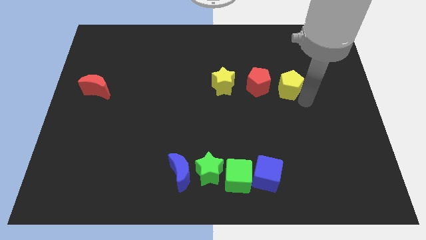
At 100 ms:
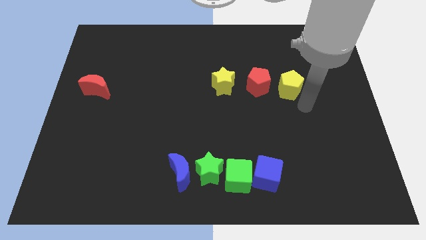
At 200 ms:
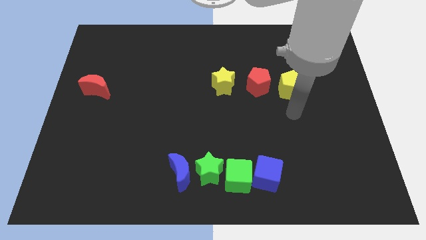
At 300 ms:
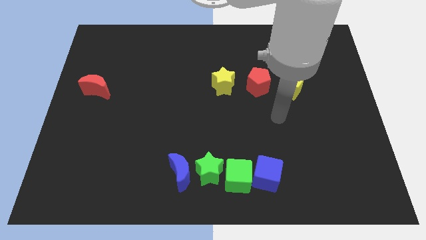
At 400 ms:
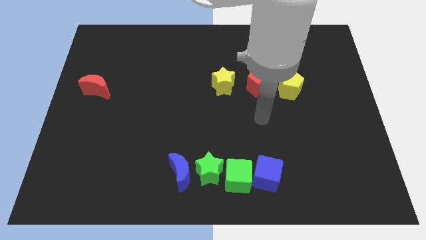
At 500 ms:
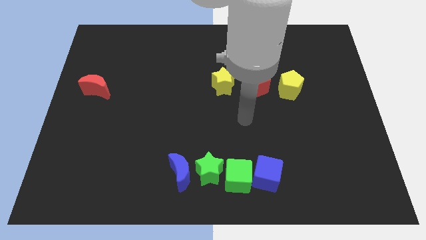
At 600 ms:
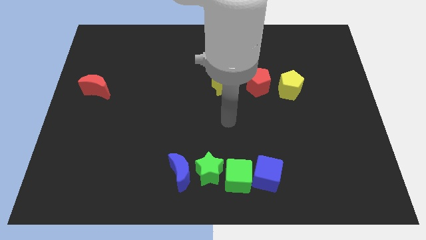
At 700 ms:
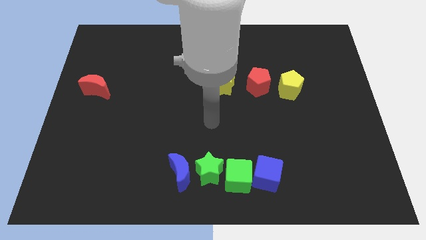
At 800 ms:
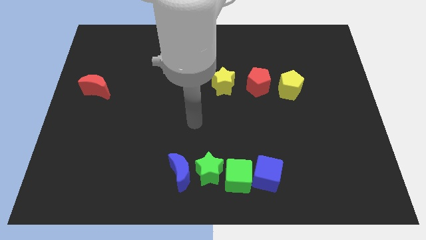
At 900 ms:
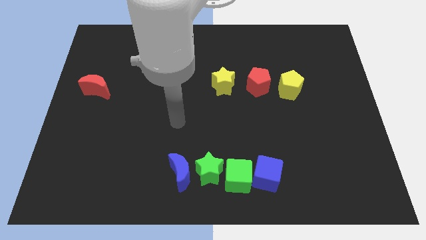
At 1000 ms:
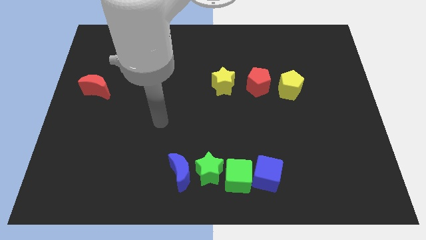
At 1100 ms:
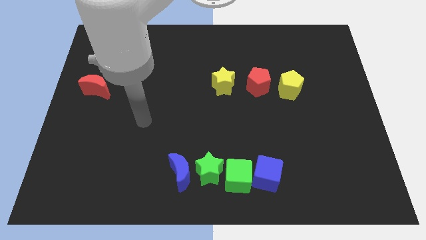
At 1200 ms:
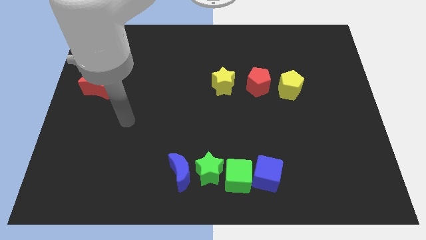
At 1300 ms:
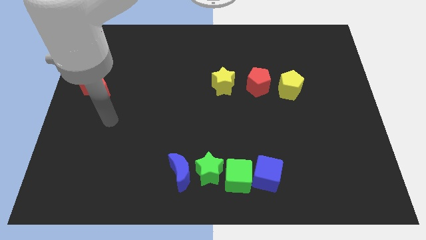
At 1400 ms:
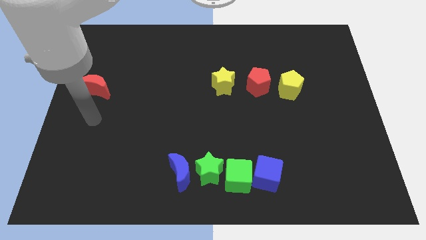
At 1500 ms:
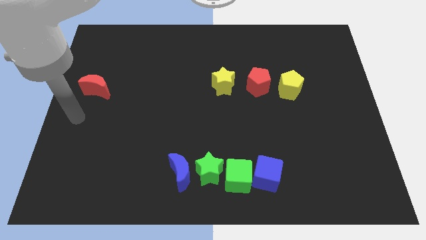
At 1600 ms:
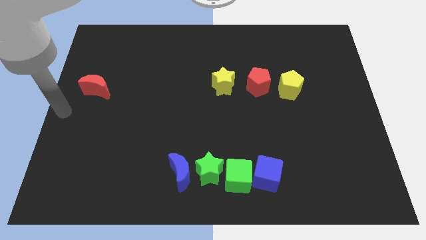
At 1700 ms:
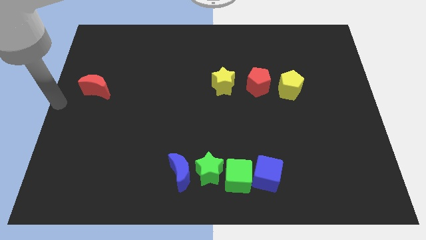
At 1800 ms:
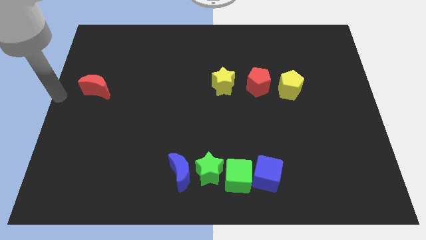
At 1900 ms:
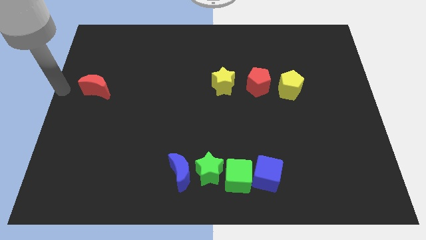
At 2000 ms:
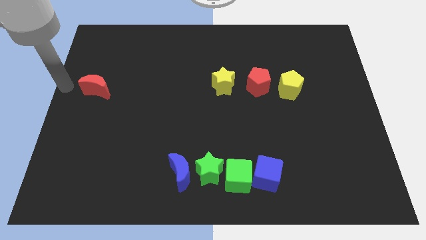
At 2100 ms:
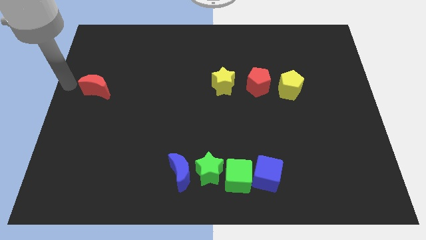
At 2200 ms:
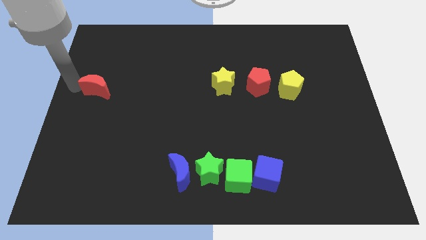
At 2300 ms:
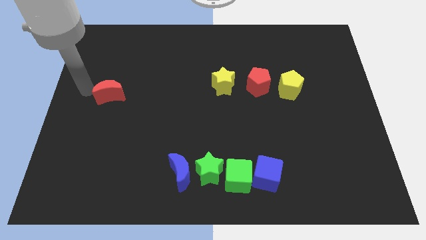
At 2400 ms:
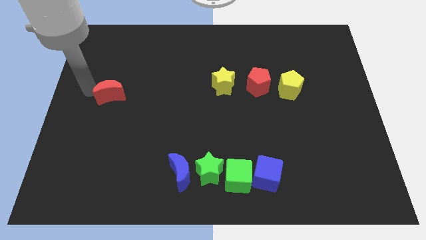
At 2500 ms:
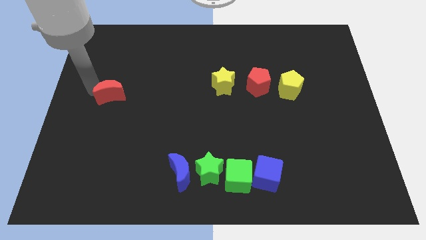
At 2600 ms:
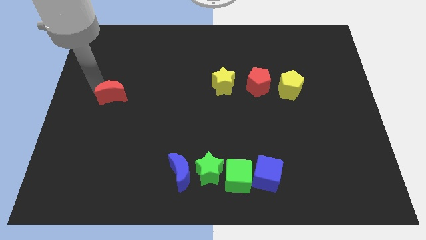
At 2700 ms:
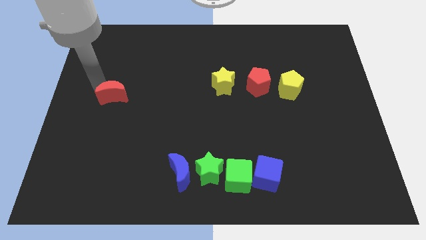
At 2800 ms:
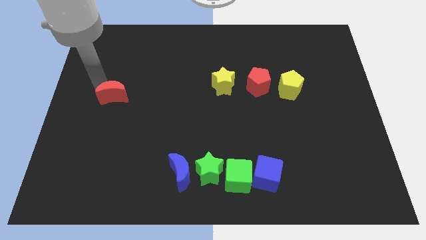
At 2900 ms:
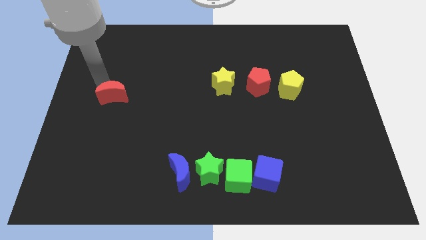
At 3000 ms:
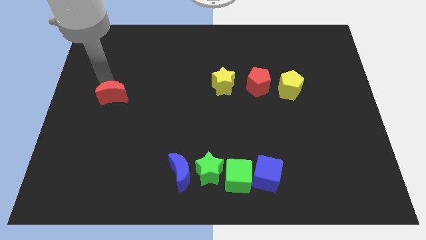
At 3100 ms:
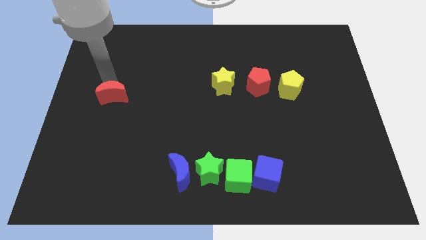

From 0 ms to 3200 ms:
move your arm and slightly move red moon

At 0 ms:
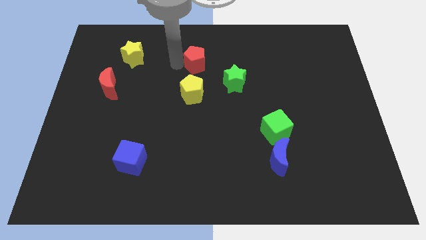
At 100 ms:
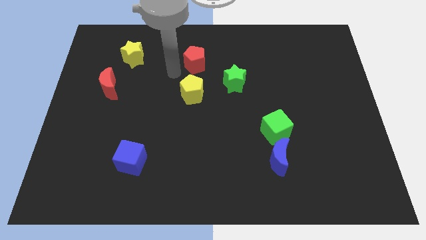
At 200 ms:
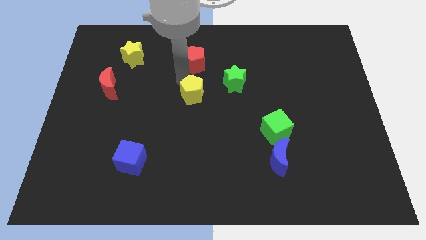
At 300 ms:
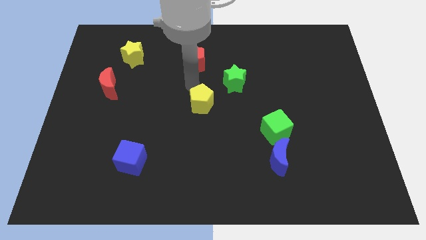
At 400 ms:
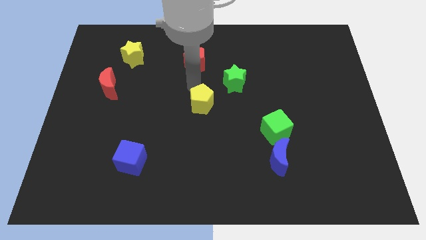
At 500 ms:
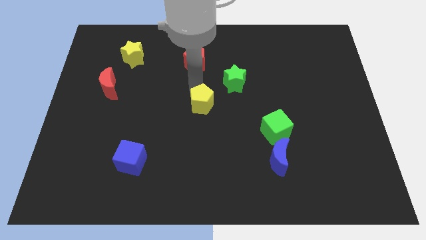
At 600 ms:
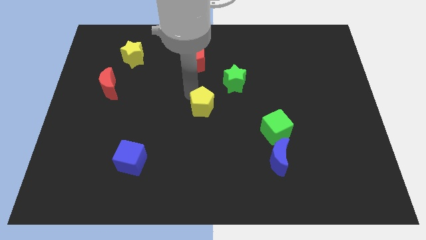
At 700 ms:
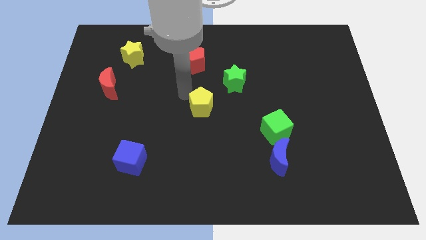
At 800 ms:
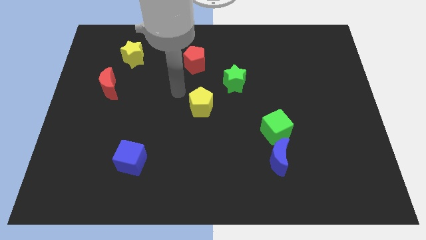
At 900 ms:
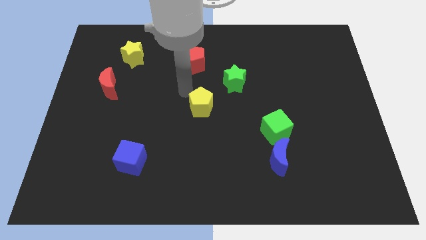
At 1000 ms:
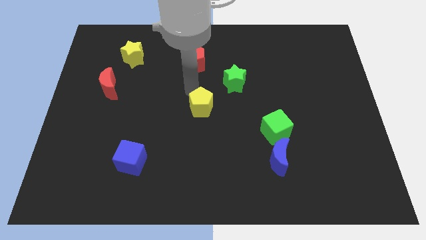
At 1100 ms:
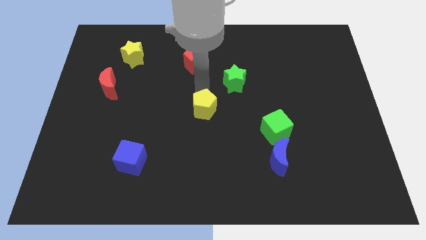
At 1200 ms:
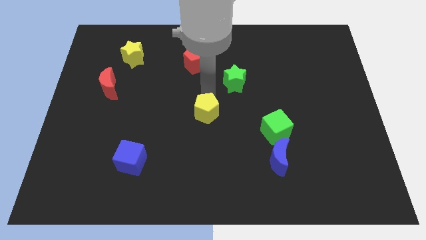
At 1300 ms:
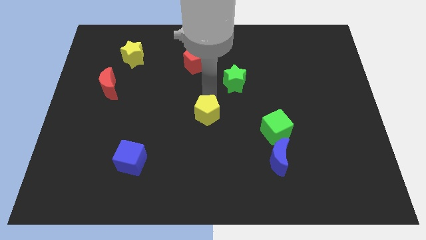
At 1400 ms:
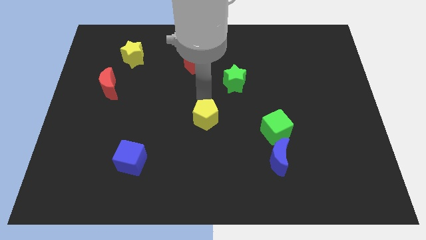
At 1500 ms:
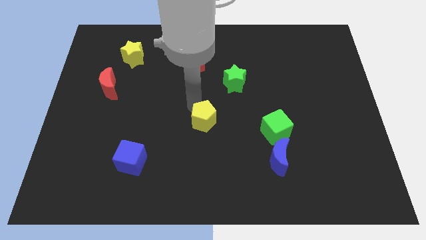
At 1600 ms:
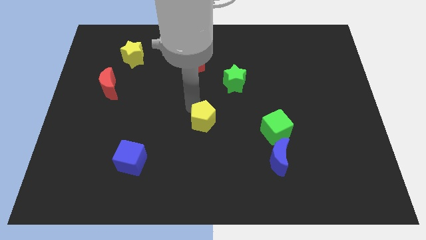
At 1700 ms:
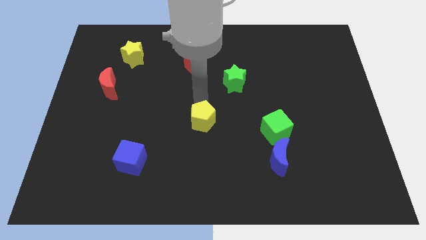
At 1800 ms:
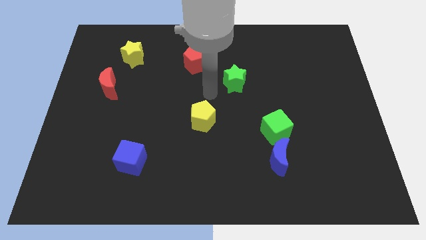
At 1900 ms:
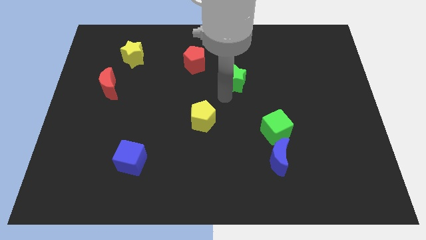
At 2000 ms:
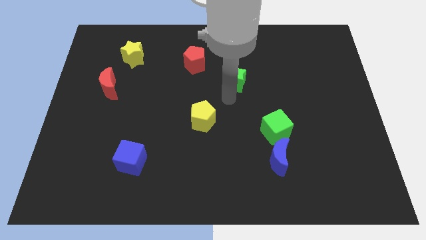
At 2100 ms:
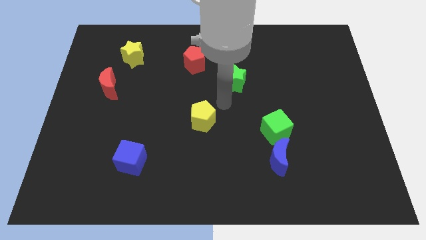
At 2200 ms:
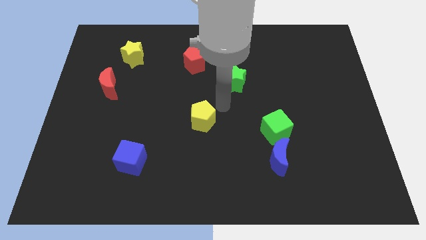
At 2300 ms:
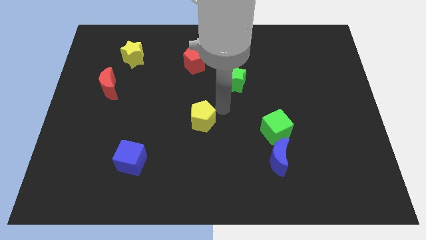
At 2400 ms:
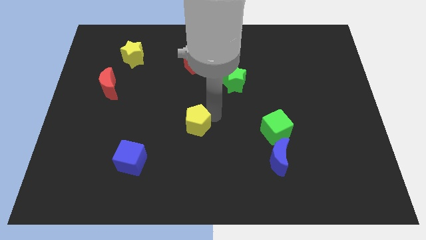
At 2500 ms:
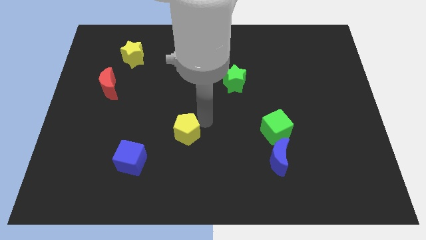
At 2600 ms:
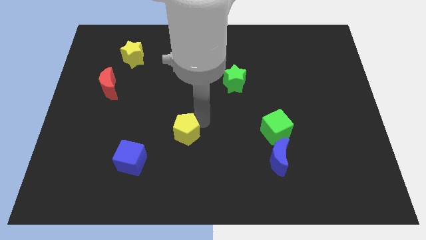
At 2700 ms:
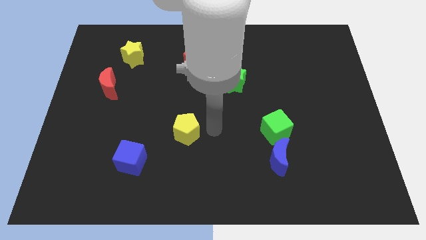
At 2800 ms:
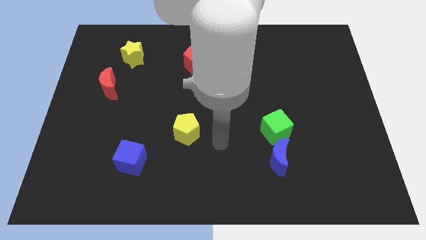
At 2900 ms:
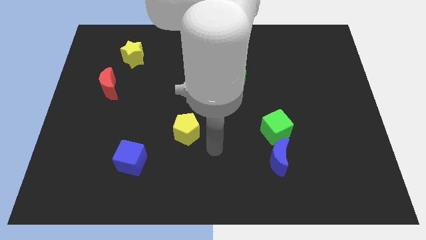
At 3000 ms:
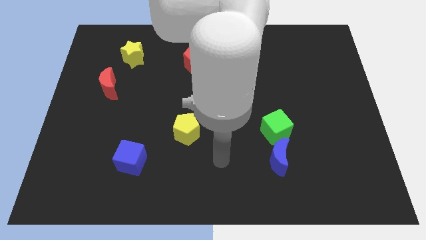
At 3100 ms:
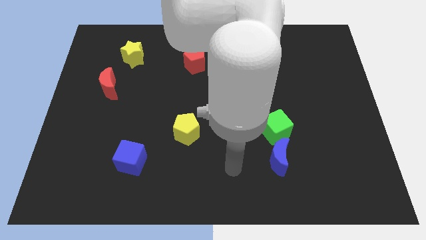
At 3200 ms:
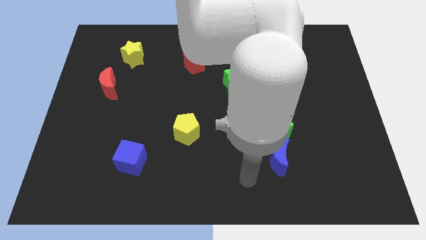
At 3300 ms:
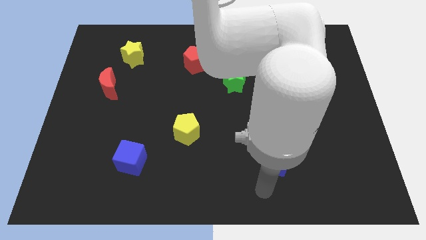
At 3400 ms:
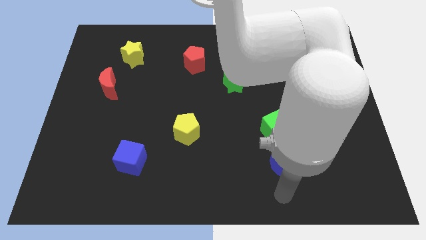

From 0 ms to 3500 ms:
place the yellow pentagon diagonally top right of blue cube

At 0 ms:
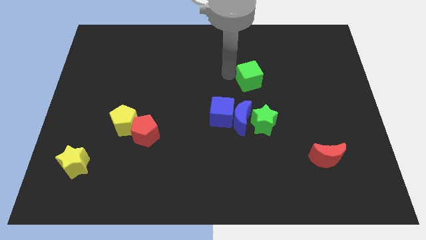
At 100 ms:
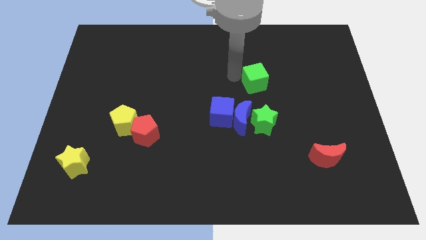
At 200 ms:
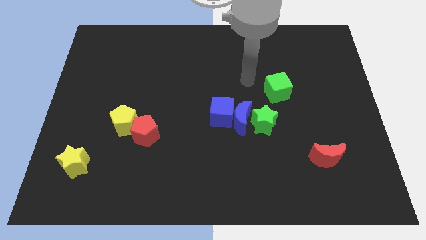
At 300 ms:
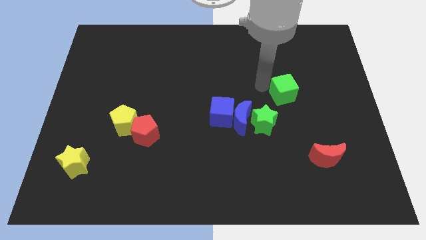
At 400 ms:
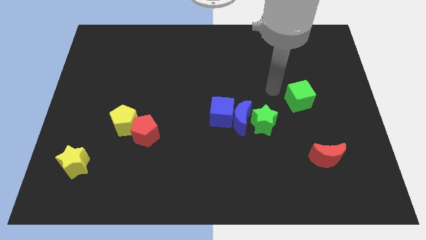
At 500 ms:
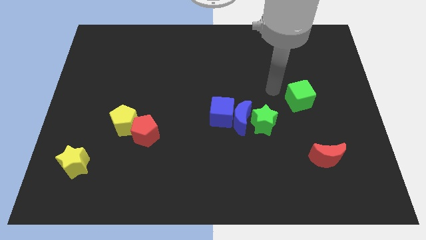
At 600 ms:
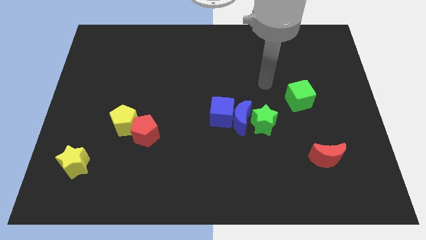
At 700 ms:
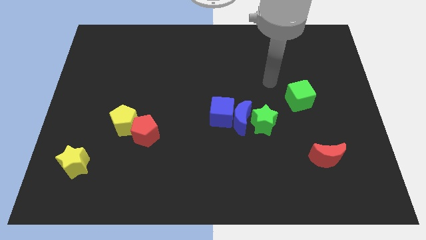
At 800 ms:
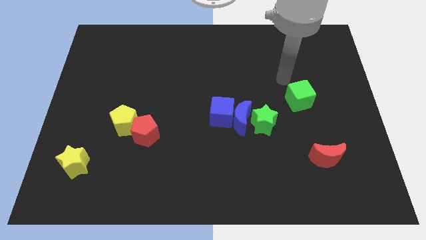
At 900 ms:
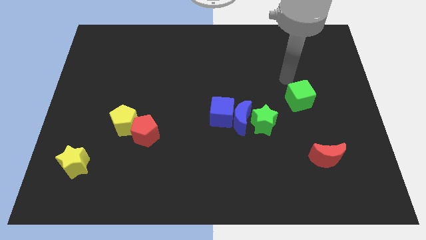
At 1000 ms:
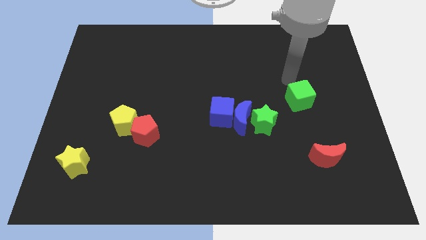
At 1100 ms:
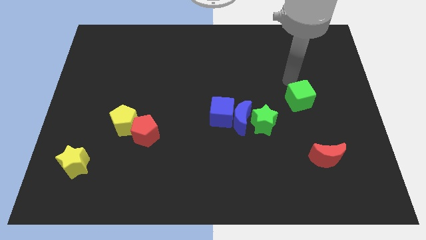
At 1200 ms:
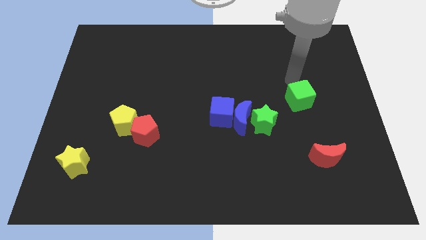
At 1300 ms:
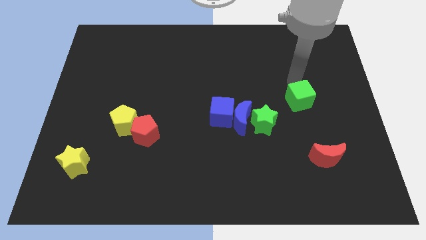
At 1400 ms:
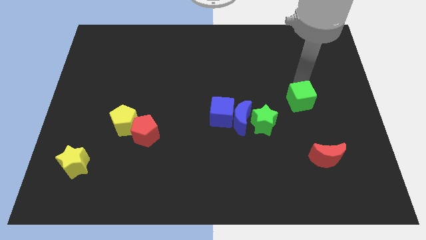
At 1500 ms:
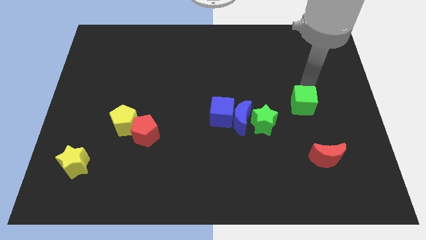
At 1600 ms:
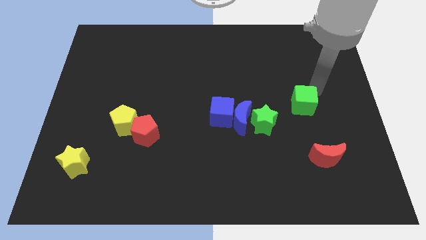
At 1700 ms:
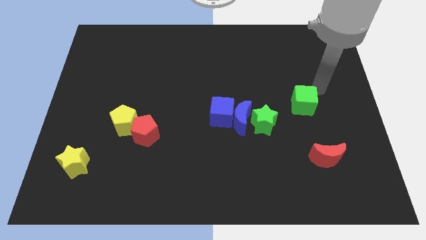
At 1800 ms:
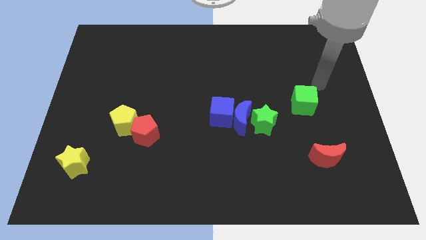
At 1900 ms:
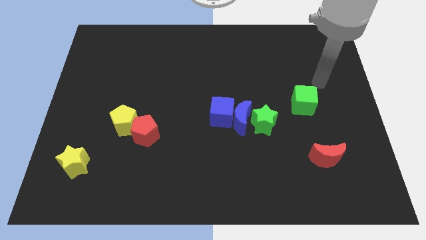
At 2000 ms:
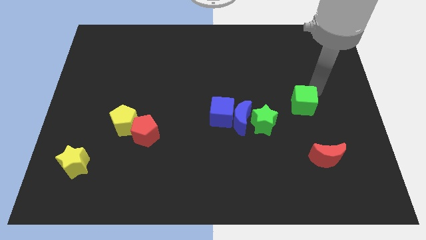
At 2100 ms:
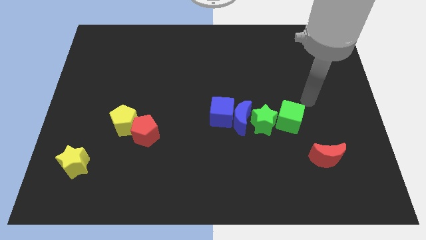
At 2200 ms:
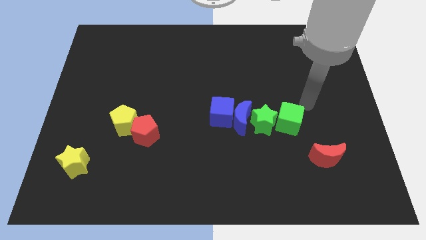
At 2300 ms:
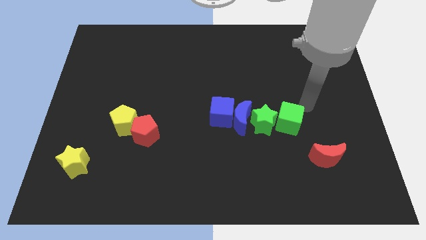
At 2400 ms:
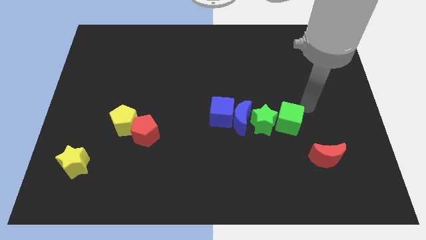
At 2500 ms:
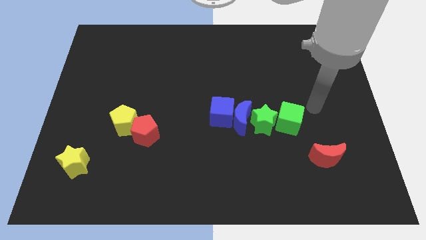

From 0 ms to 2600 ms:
move the green cube right to the green star
